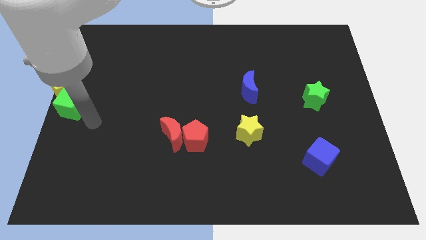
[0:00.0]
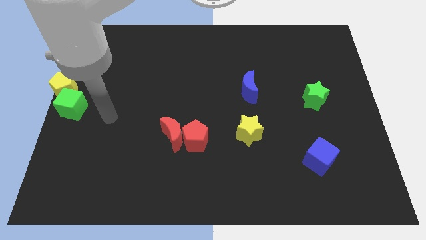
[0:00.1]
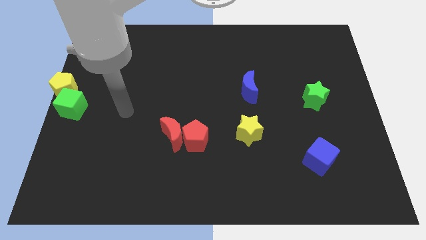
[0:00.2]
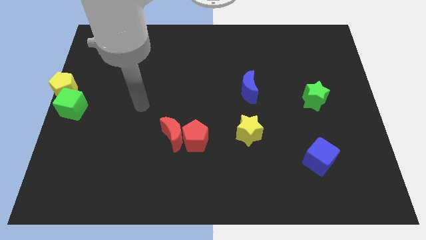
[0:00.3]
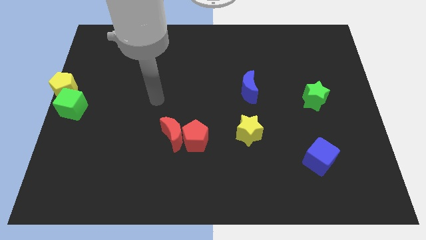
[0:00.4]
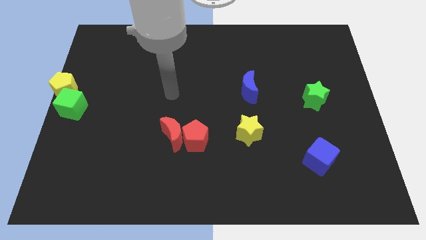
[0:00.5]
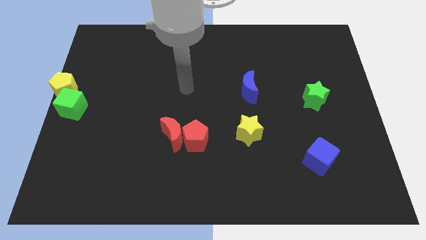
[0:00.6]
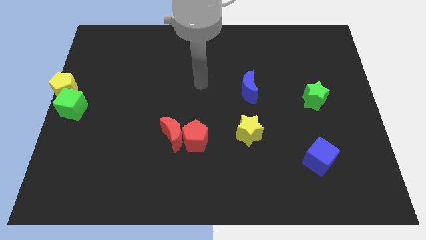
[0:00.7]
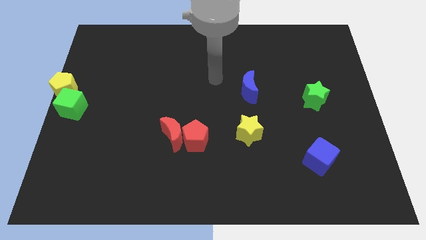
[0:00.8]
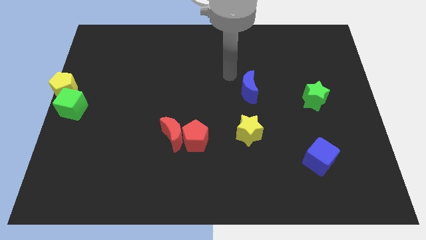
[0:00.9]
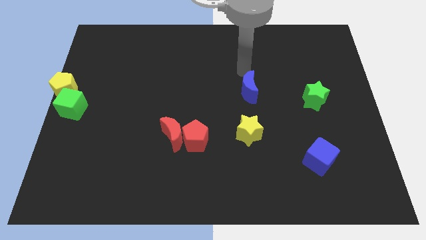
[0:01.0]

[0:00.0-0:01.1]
point your arm at the top of the blue crescent

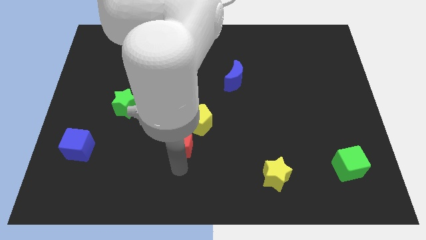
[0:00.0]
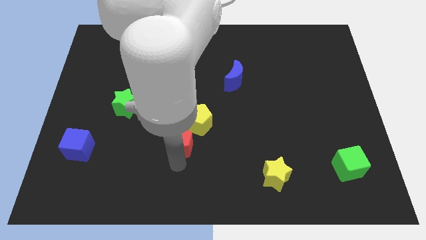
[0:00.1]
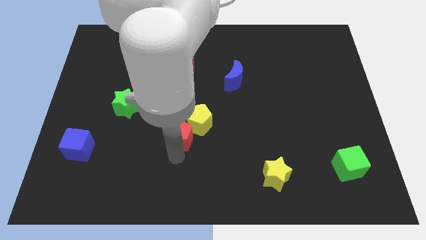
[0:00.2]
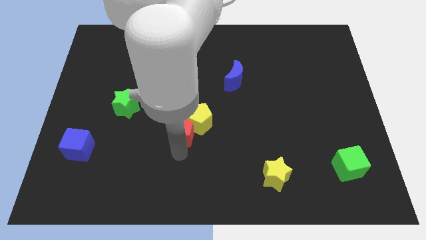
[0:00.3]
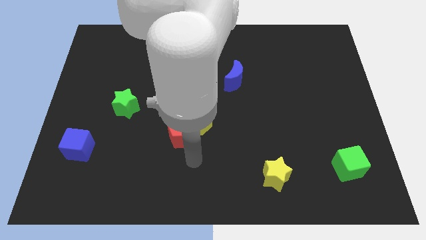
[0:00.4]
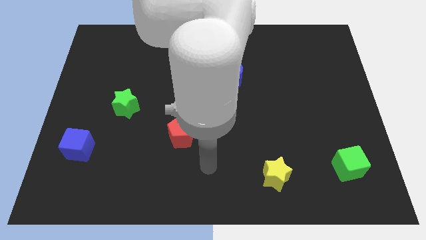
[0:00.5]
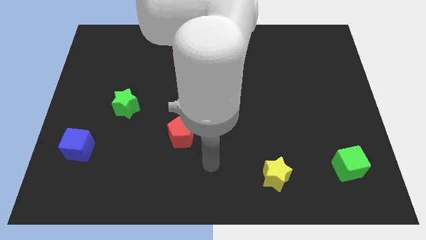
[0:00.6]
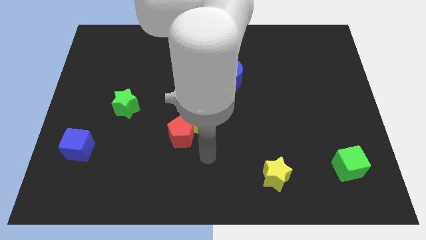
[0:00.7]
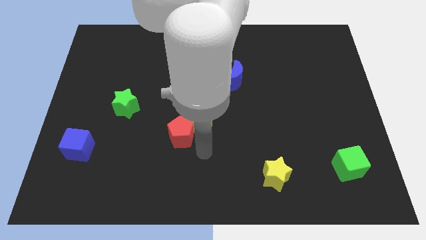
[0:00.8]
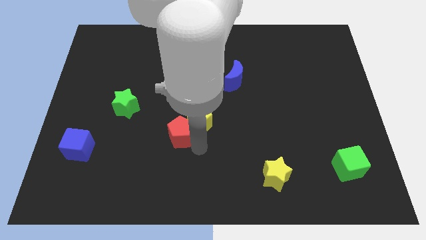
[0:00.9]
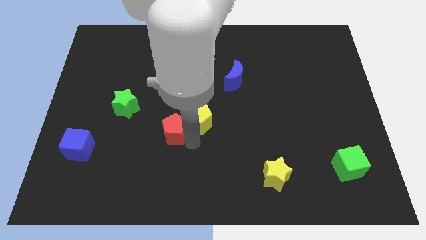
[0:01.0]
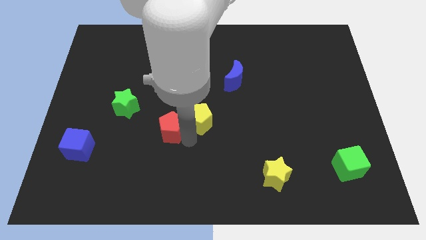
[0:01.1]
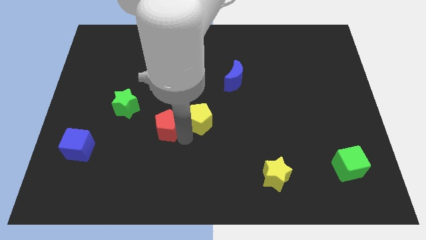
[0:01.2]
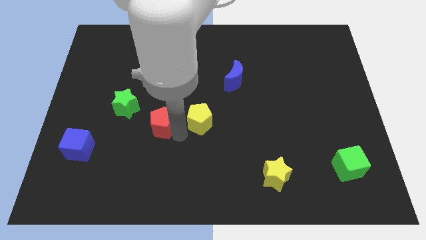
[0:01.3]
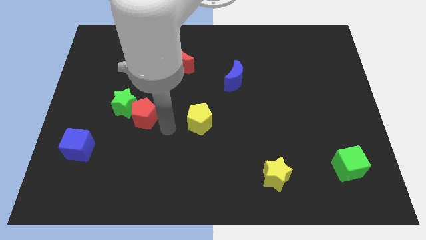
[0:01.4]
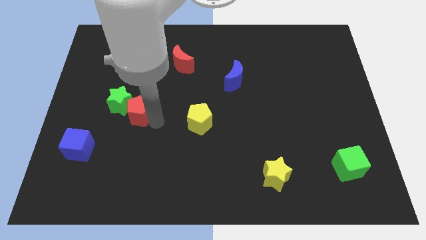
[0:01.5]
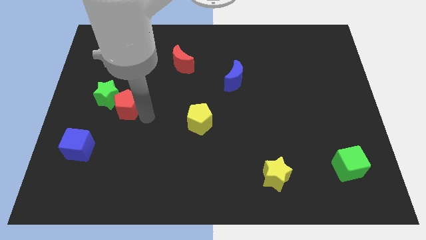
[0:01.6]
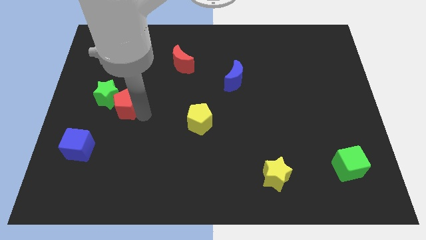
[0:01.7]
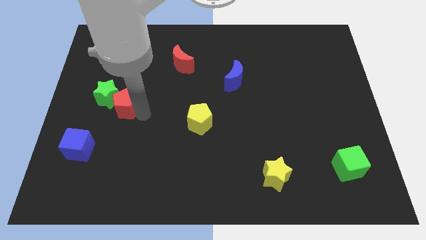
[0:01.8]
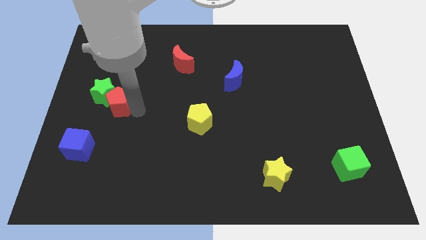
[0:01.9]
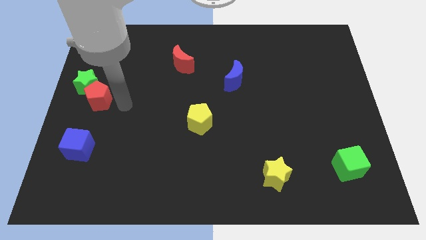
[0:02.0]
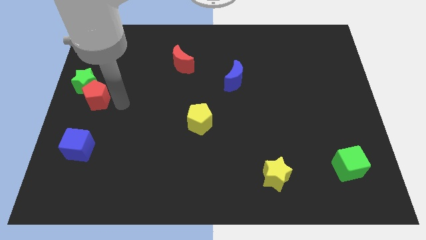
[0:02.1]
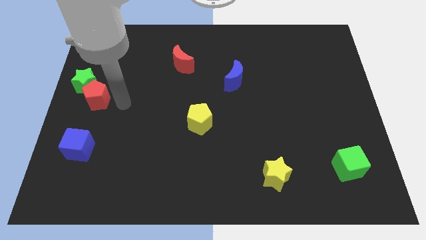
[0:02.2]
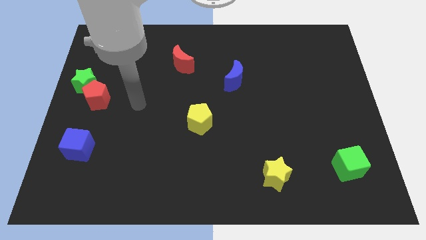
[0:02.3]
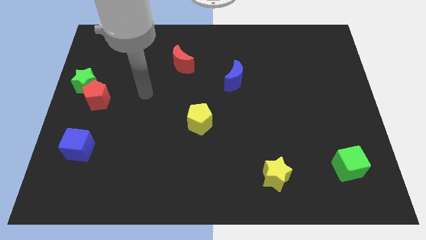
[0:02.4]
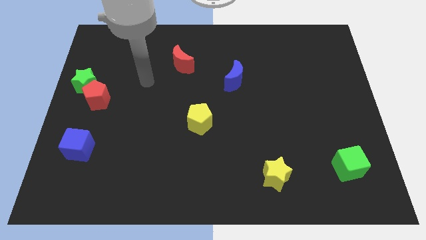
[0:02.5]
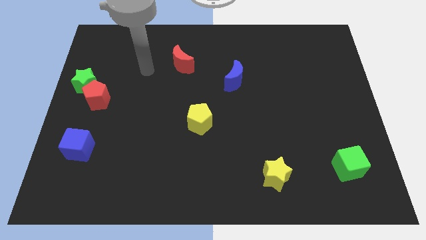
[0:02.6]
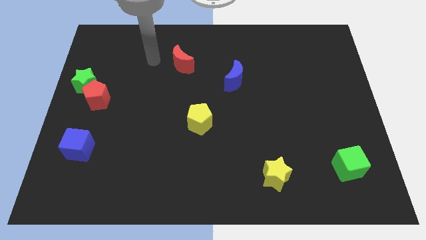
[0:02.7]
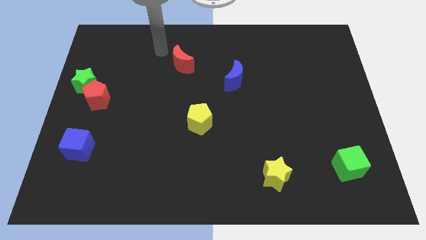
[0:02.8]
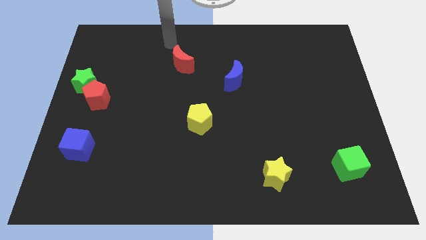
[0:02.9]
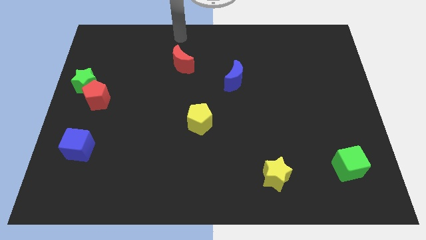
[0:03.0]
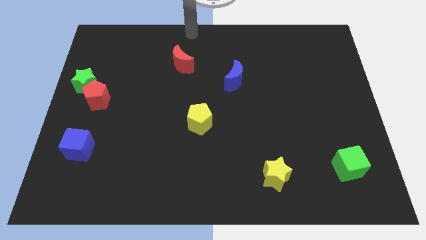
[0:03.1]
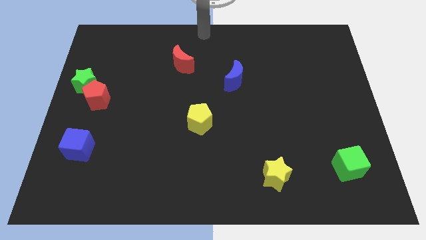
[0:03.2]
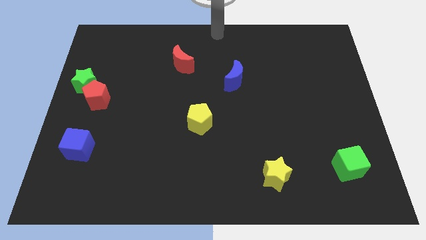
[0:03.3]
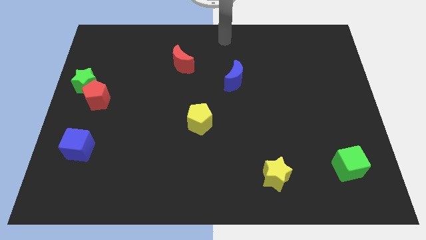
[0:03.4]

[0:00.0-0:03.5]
place the red pentagon to the left side of the board

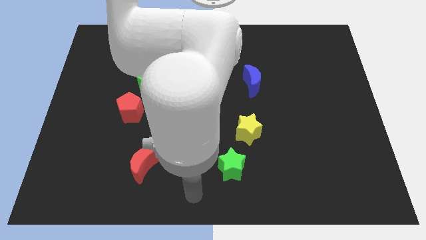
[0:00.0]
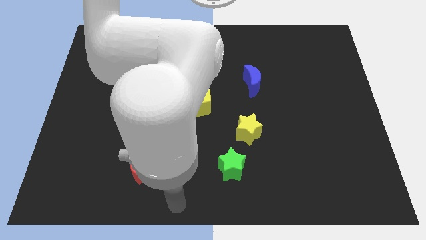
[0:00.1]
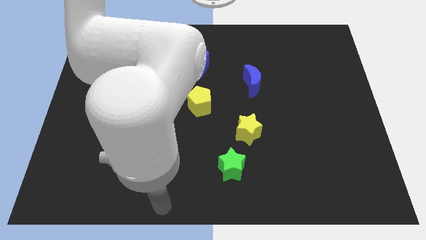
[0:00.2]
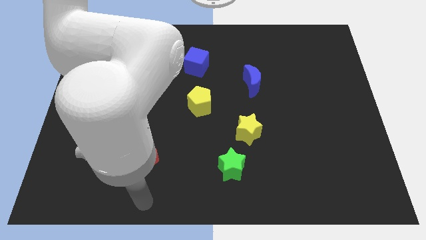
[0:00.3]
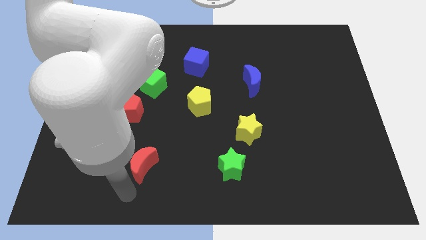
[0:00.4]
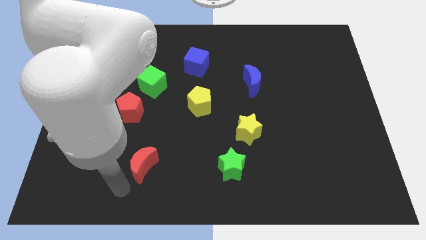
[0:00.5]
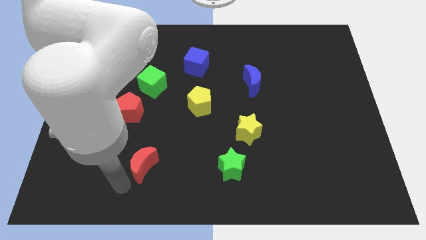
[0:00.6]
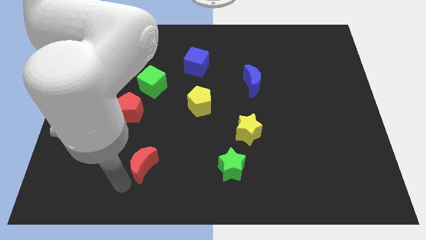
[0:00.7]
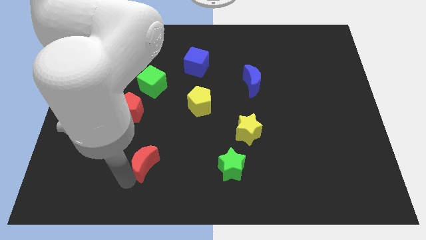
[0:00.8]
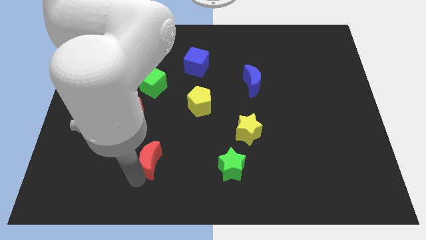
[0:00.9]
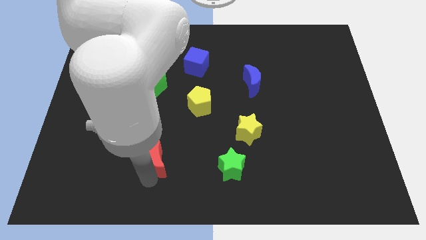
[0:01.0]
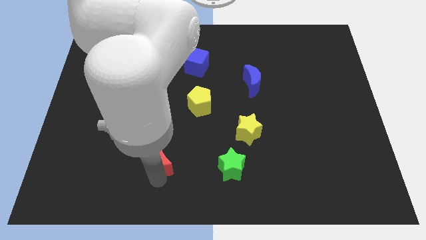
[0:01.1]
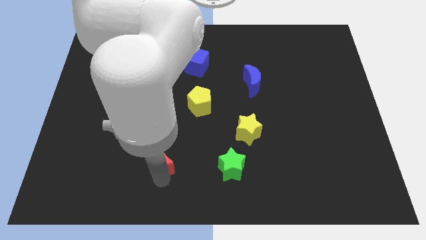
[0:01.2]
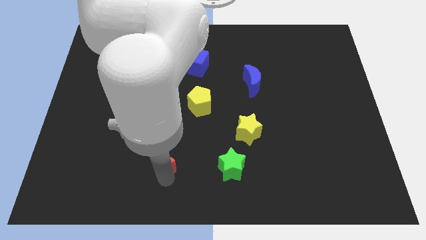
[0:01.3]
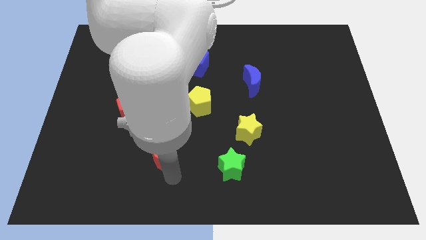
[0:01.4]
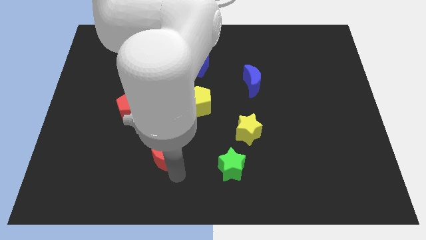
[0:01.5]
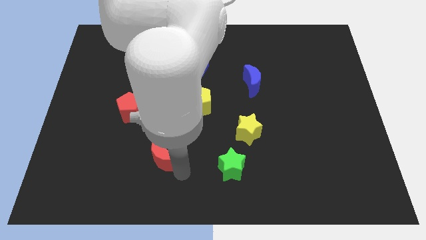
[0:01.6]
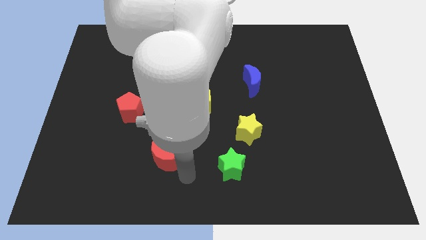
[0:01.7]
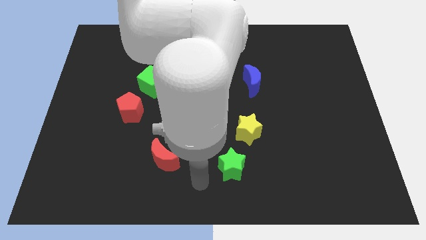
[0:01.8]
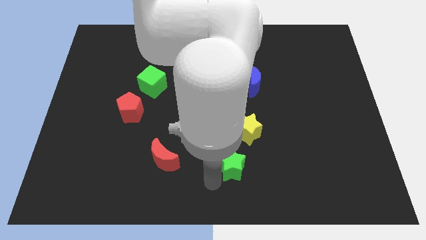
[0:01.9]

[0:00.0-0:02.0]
push the red crecent upwards slightly

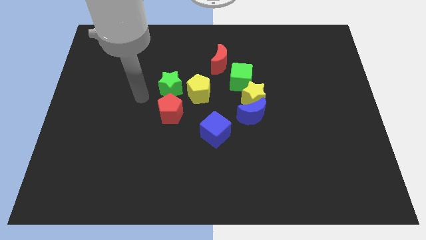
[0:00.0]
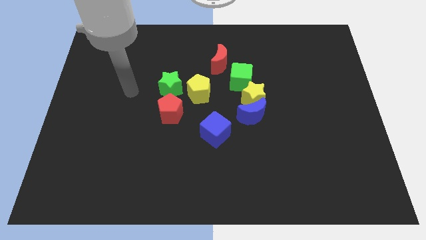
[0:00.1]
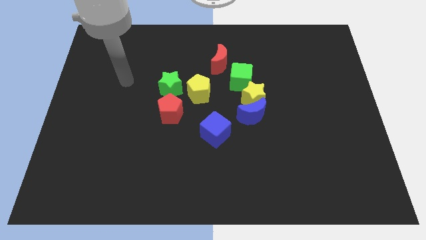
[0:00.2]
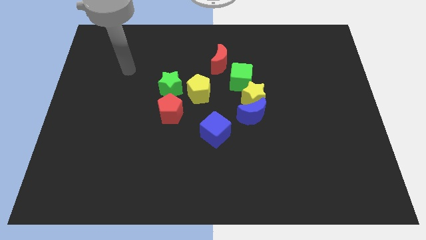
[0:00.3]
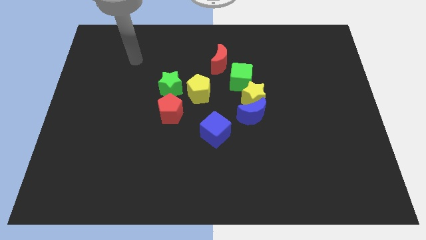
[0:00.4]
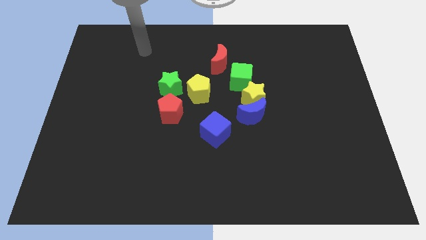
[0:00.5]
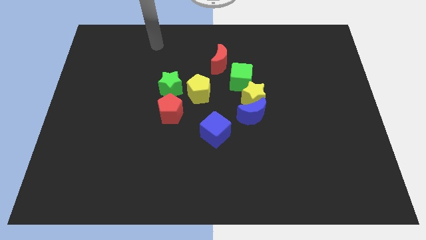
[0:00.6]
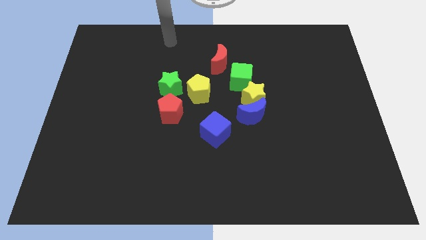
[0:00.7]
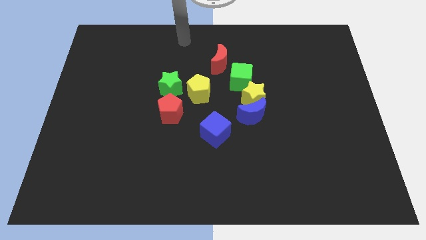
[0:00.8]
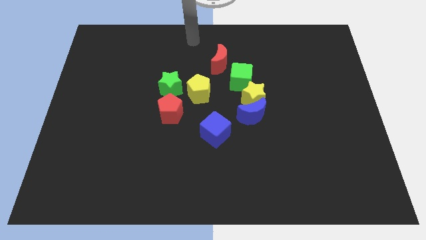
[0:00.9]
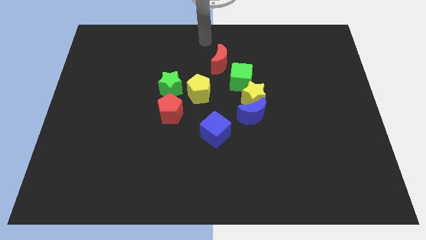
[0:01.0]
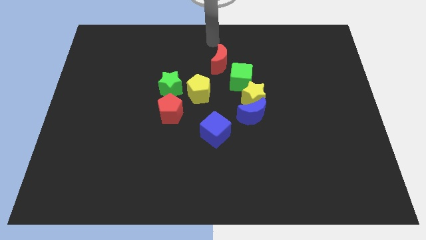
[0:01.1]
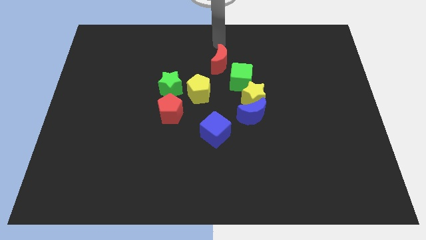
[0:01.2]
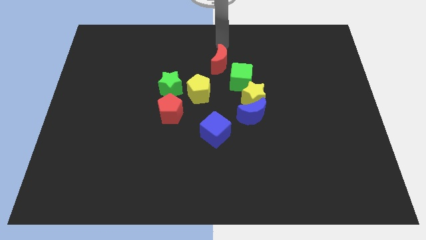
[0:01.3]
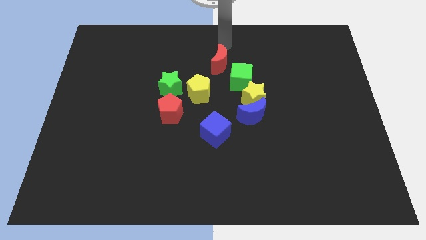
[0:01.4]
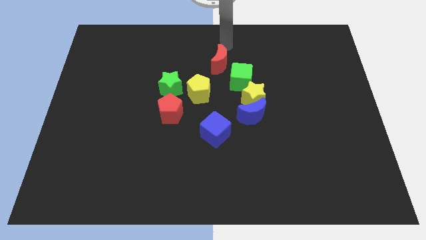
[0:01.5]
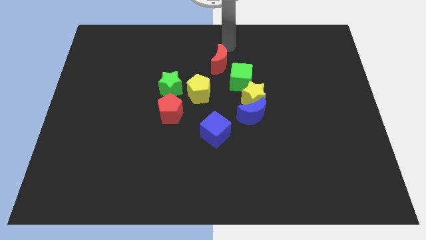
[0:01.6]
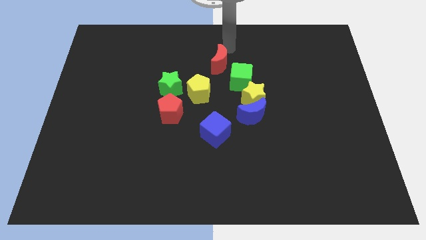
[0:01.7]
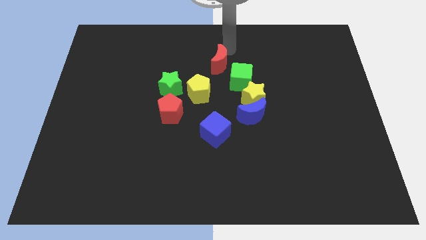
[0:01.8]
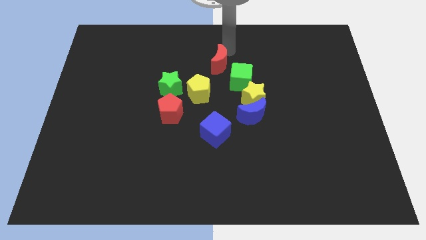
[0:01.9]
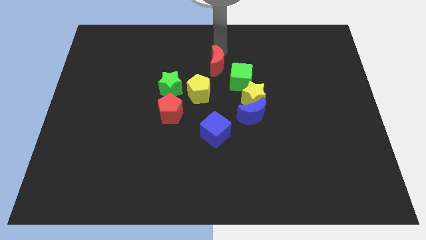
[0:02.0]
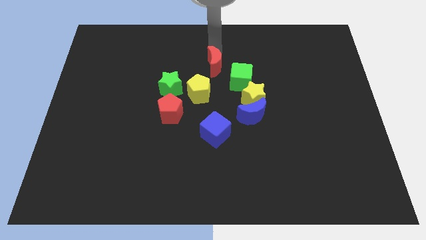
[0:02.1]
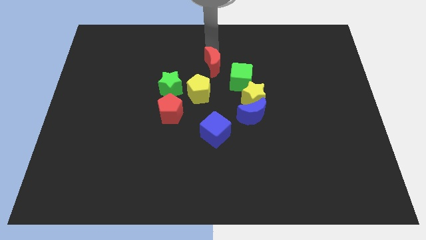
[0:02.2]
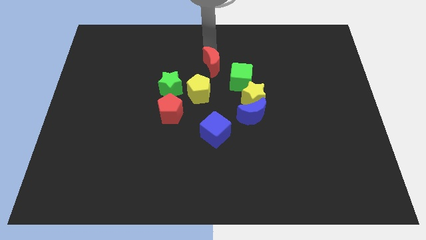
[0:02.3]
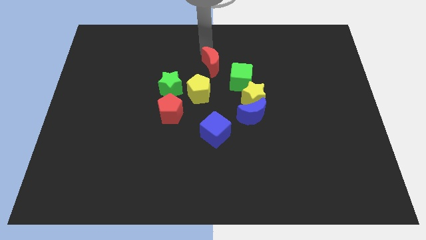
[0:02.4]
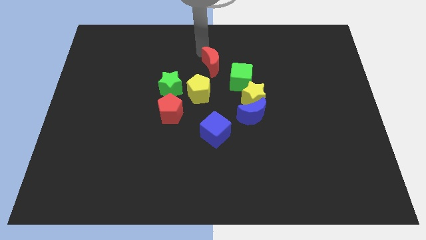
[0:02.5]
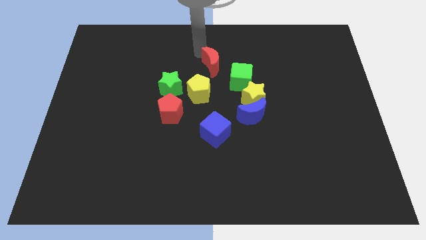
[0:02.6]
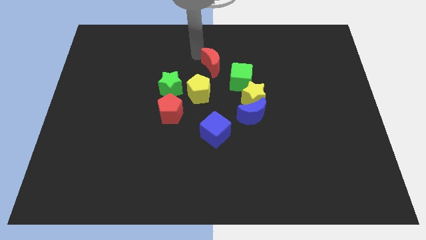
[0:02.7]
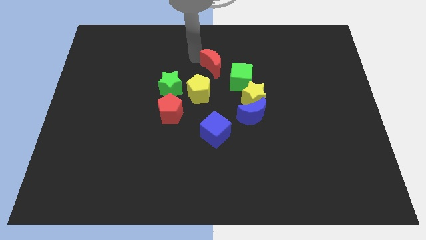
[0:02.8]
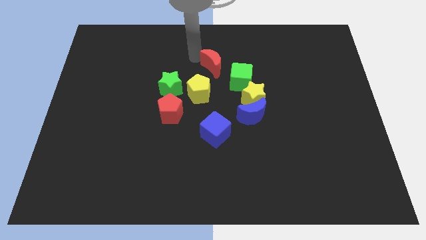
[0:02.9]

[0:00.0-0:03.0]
slightly push the red crescent towards yellow pentagon
